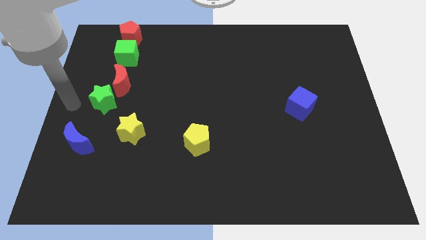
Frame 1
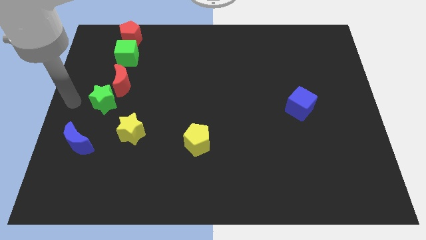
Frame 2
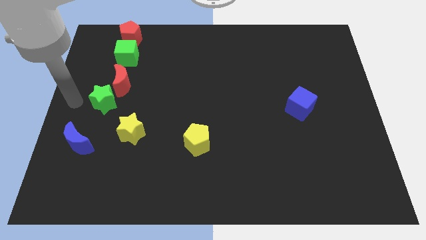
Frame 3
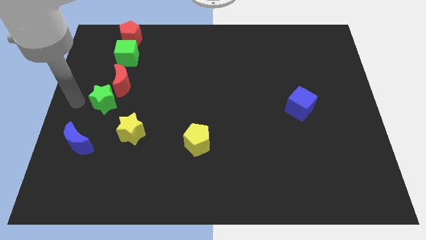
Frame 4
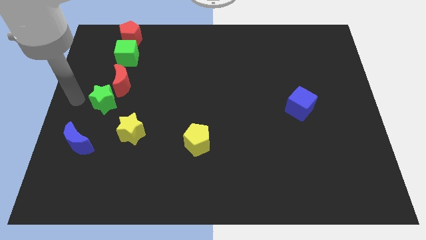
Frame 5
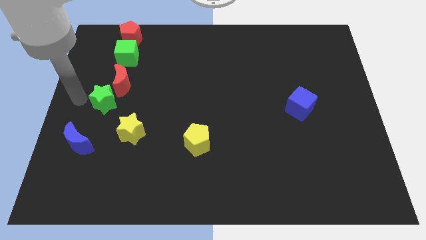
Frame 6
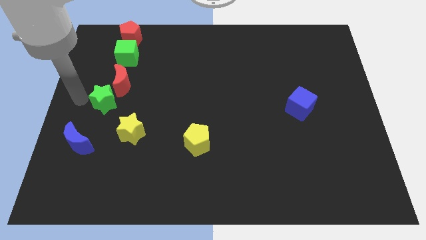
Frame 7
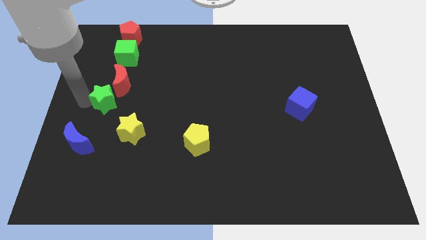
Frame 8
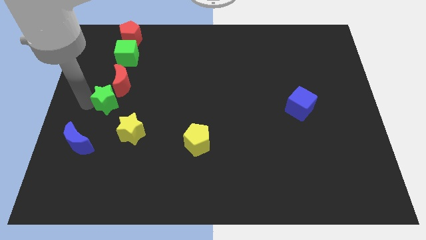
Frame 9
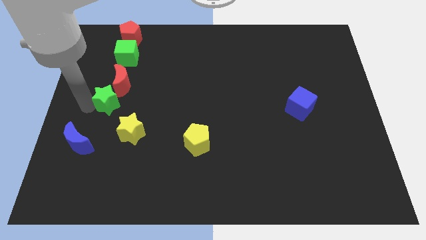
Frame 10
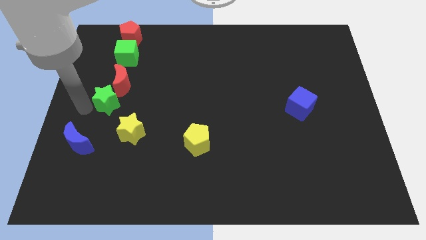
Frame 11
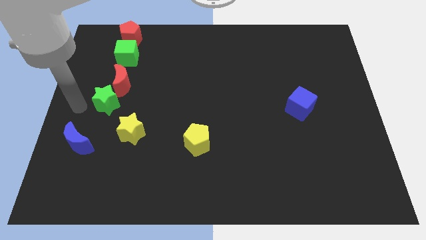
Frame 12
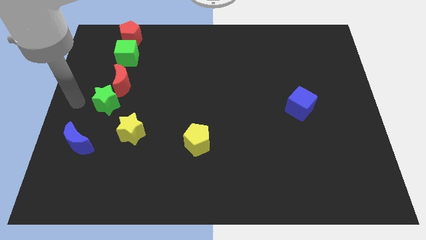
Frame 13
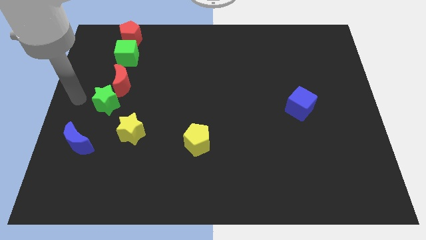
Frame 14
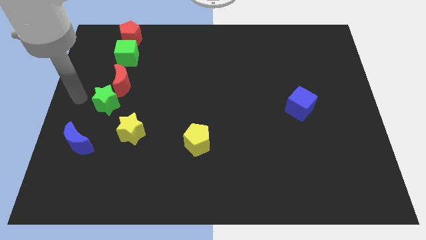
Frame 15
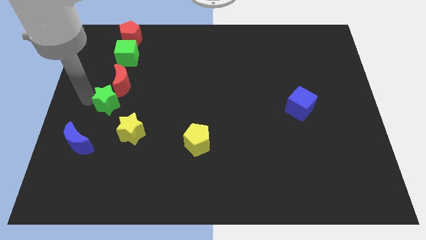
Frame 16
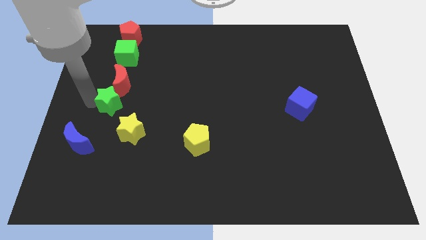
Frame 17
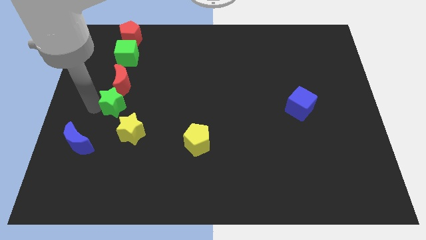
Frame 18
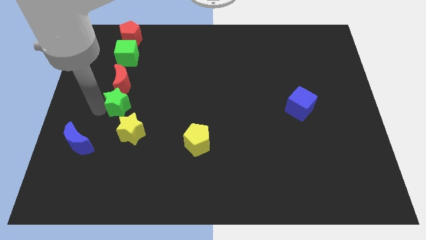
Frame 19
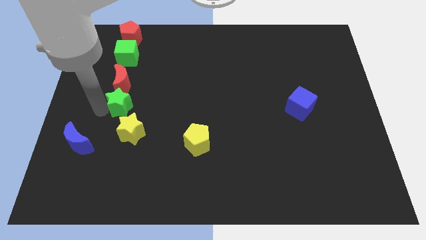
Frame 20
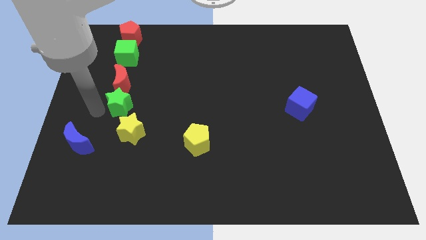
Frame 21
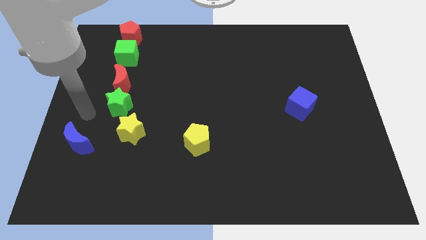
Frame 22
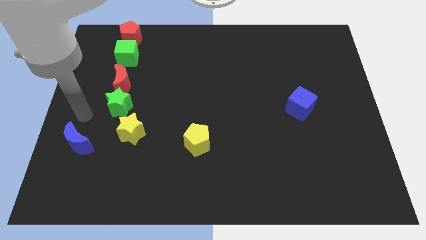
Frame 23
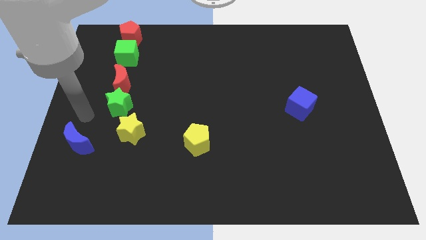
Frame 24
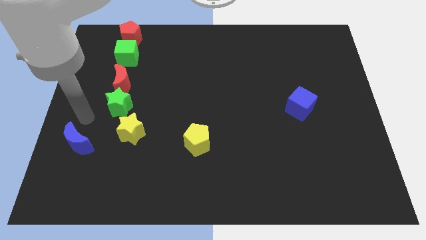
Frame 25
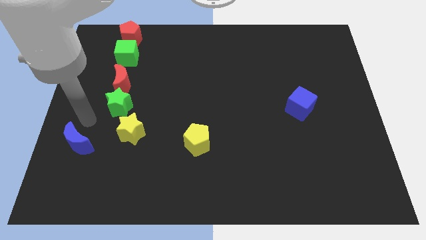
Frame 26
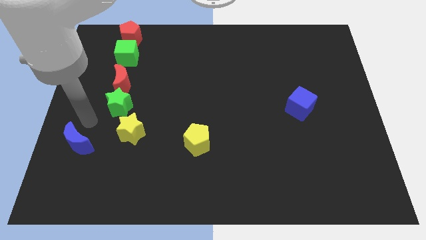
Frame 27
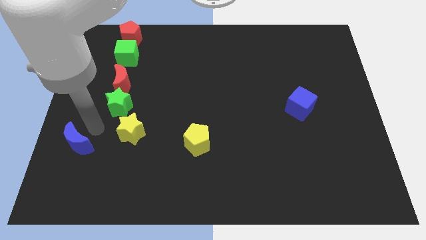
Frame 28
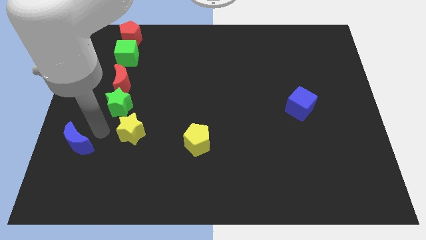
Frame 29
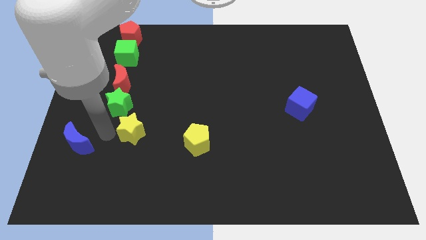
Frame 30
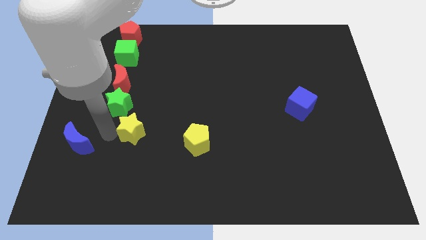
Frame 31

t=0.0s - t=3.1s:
place green star in between the red crescent and yellow star

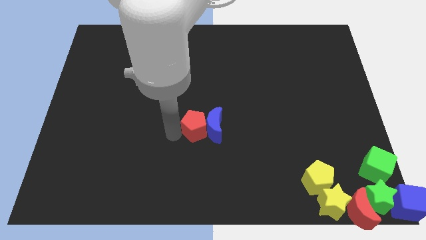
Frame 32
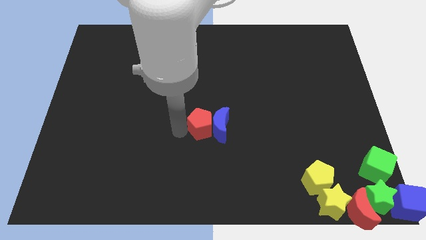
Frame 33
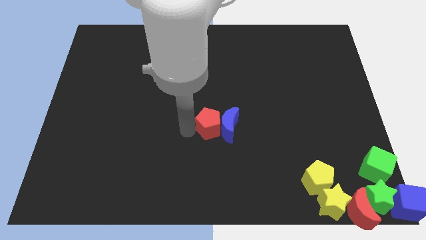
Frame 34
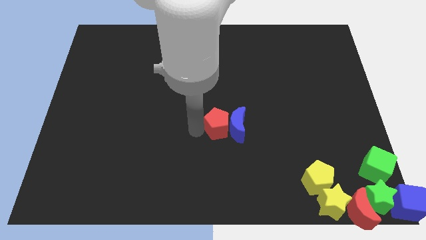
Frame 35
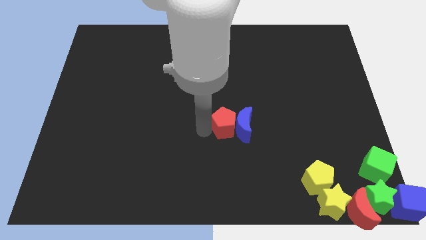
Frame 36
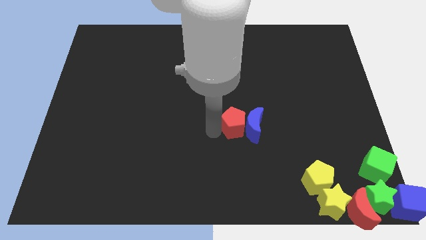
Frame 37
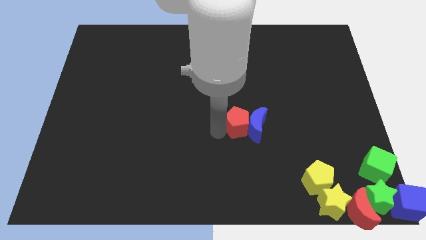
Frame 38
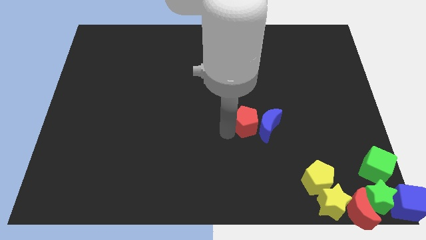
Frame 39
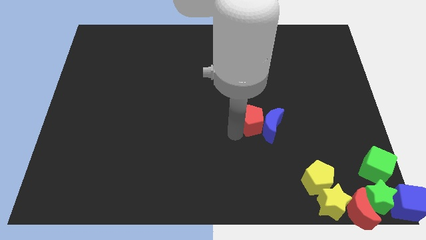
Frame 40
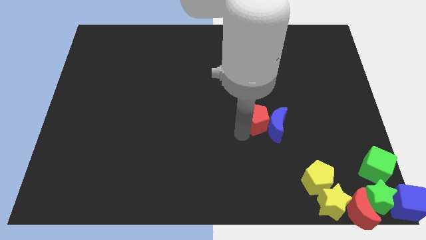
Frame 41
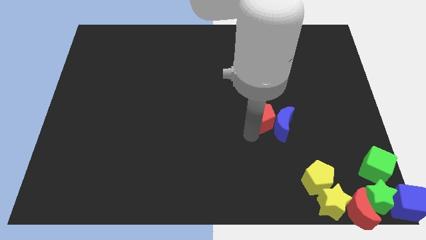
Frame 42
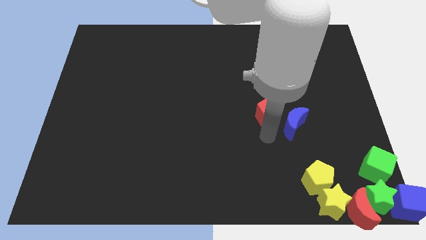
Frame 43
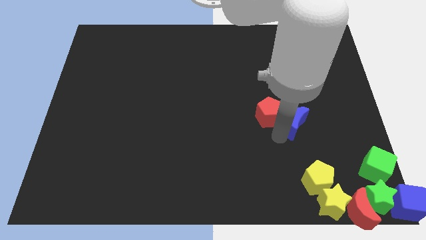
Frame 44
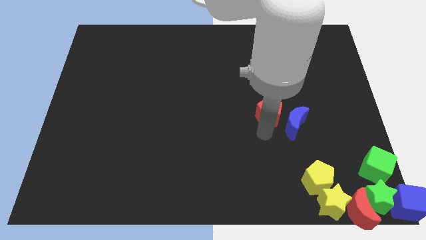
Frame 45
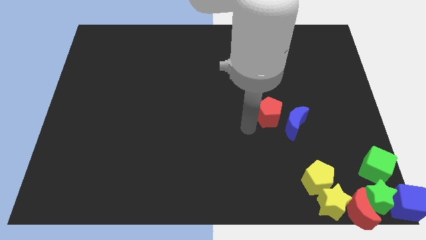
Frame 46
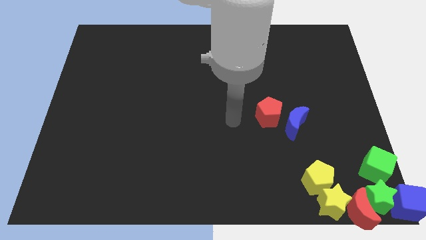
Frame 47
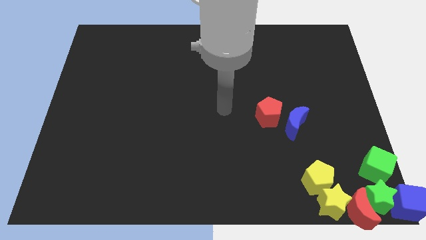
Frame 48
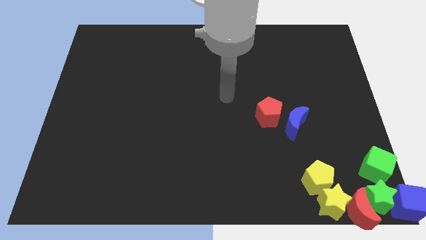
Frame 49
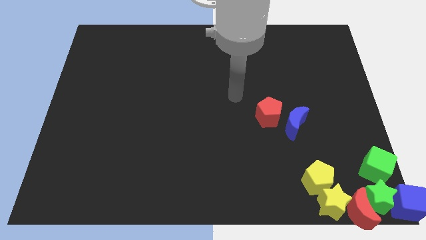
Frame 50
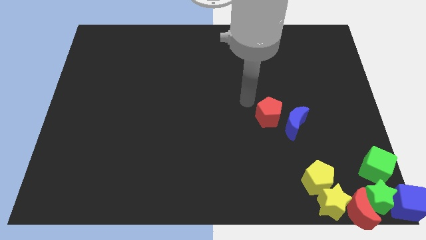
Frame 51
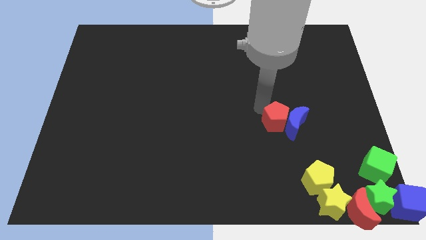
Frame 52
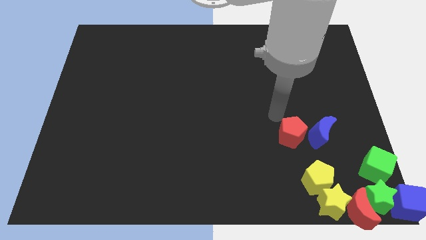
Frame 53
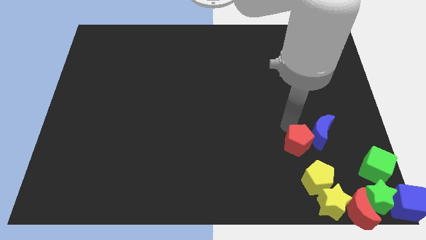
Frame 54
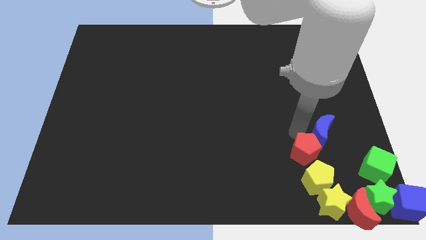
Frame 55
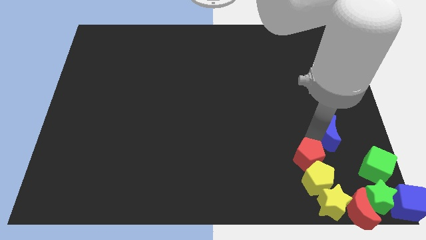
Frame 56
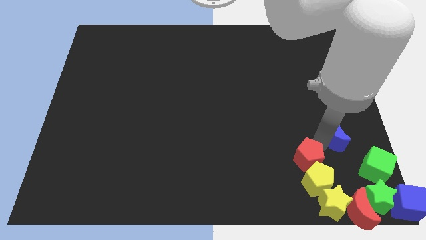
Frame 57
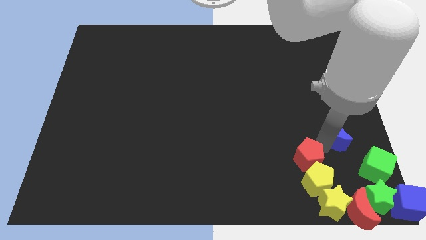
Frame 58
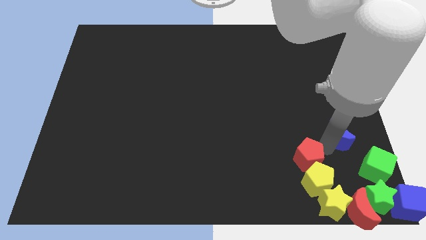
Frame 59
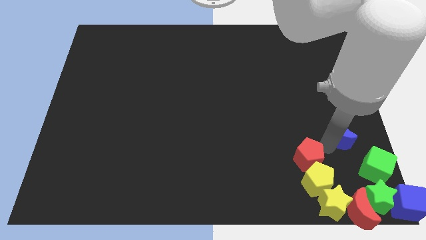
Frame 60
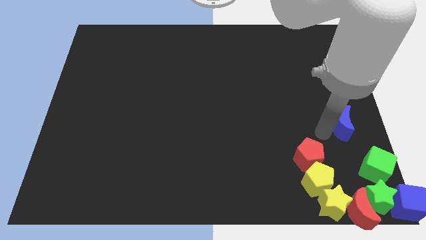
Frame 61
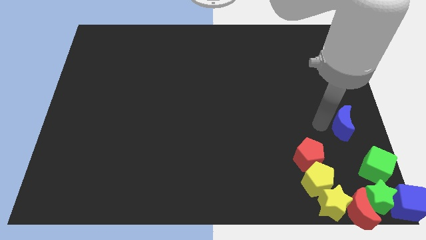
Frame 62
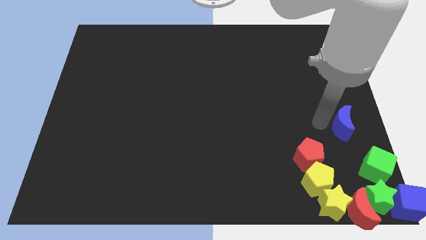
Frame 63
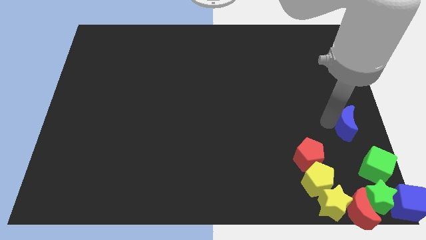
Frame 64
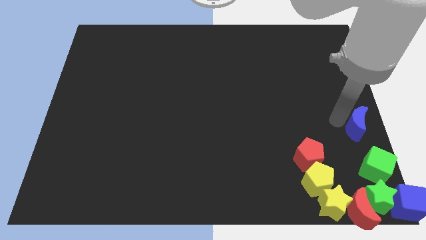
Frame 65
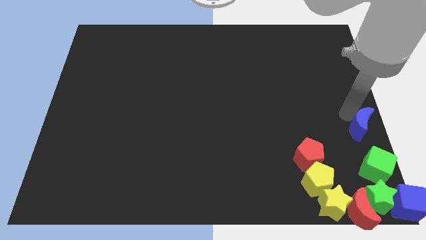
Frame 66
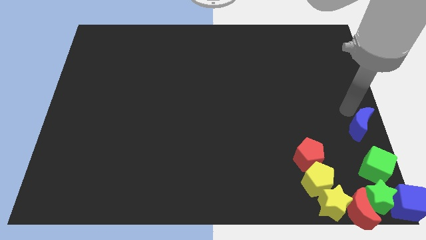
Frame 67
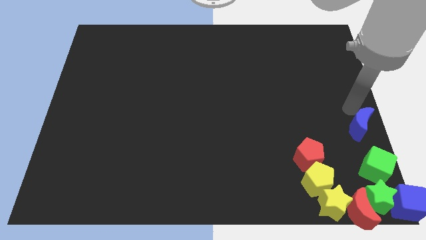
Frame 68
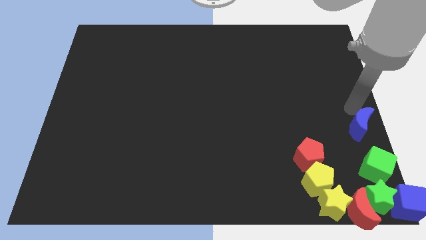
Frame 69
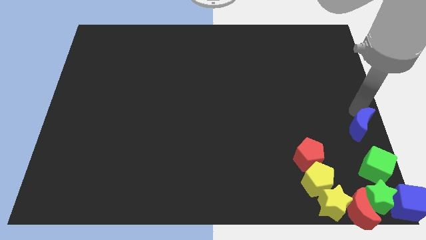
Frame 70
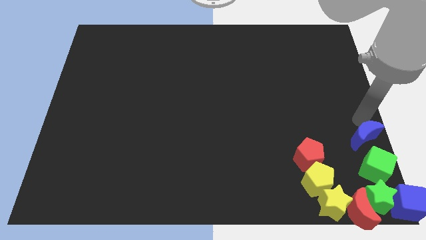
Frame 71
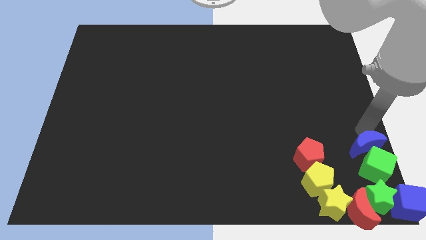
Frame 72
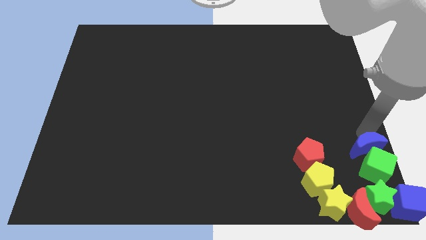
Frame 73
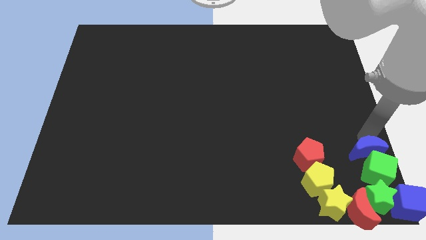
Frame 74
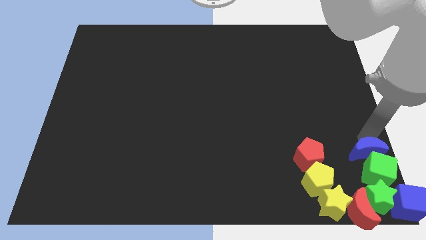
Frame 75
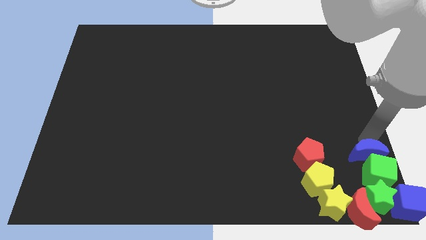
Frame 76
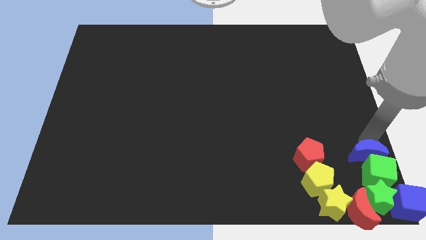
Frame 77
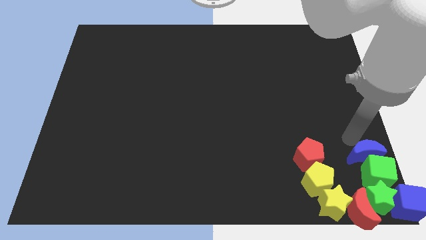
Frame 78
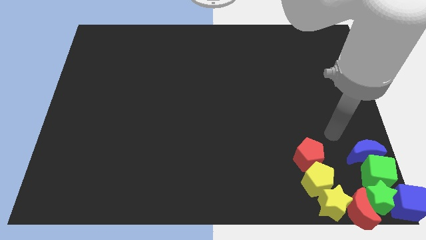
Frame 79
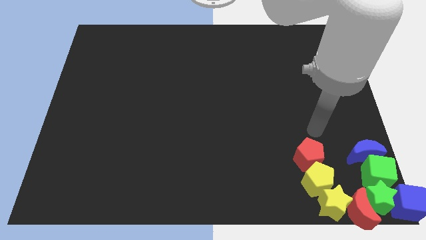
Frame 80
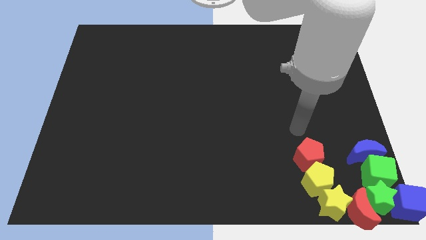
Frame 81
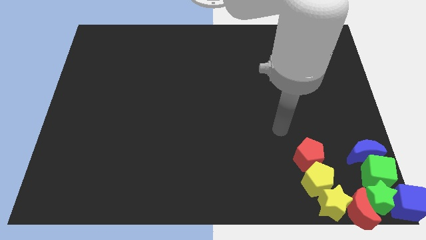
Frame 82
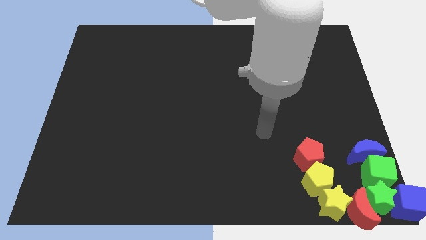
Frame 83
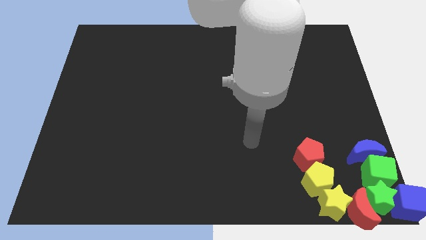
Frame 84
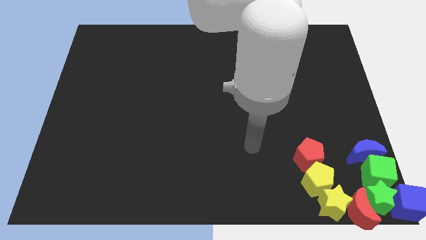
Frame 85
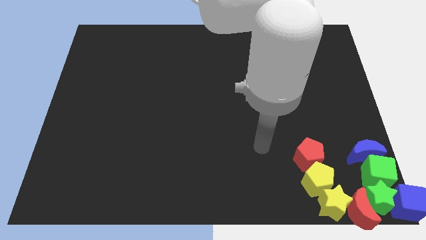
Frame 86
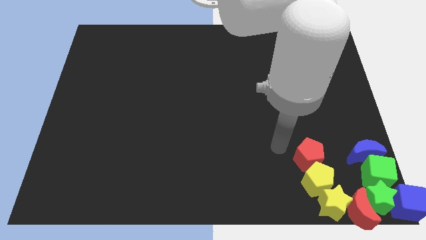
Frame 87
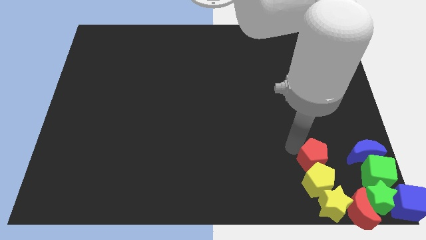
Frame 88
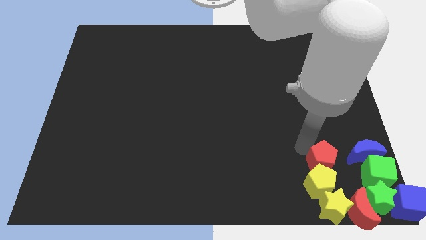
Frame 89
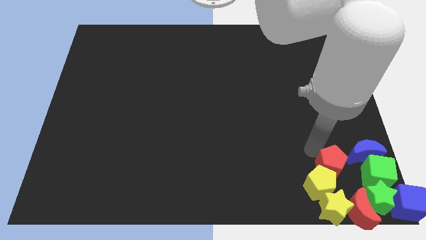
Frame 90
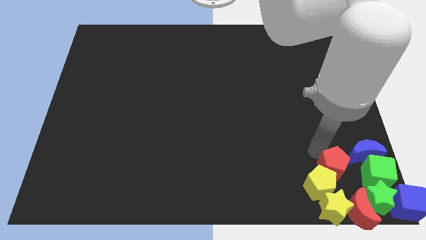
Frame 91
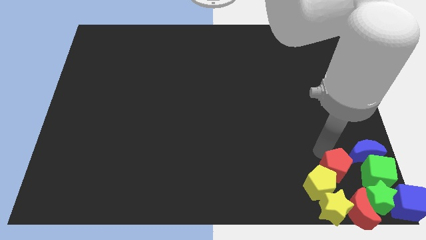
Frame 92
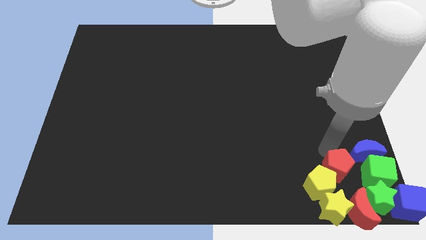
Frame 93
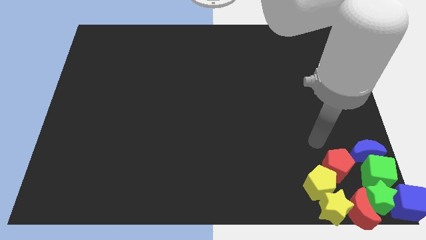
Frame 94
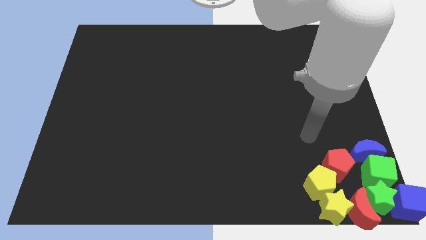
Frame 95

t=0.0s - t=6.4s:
add the red pentagon and blue moon to the group of blocks at the bottom right corner of the board
